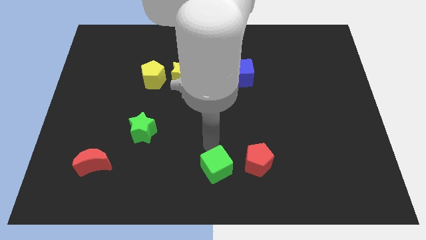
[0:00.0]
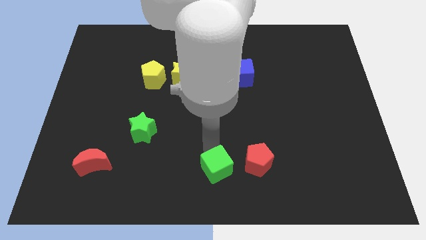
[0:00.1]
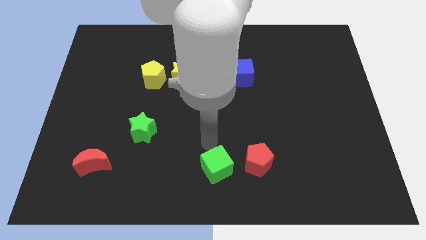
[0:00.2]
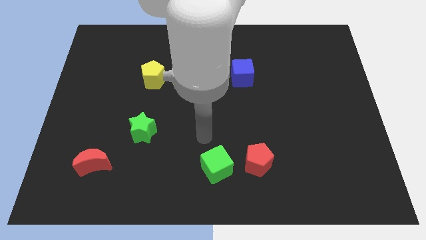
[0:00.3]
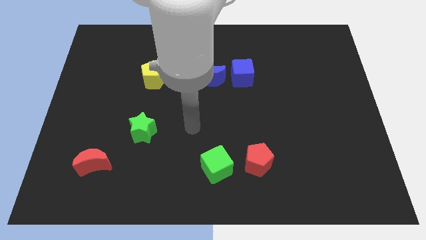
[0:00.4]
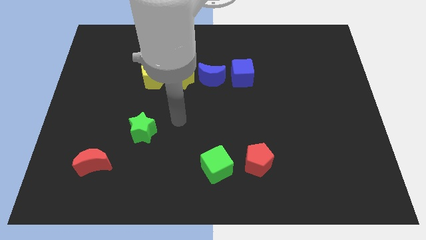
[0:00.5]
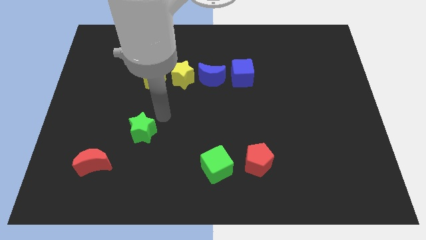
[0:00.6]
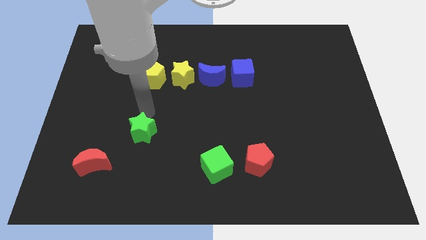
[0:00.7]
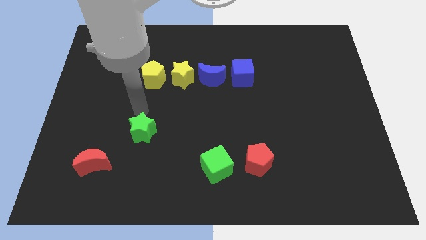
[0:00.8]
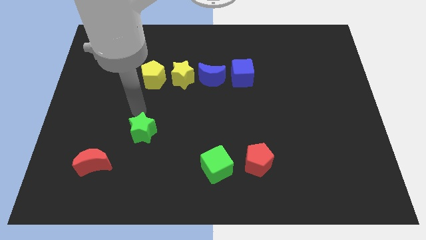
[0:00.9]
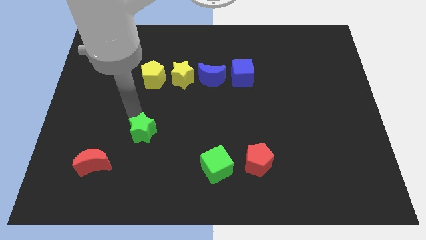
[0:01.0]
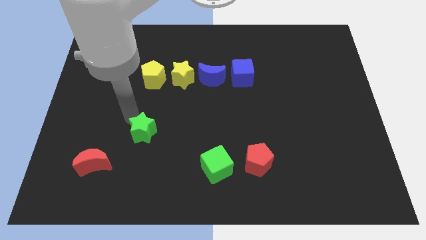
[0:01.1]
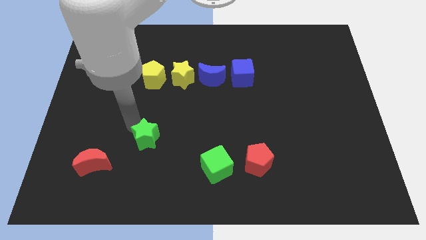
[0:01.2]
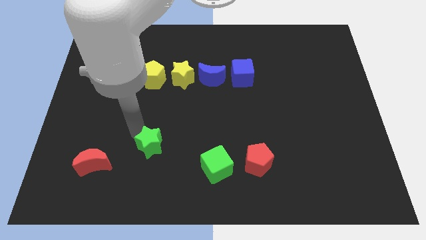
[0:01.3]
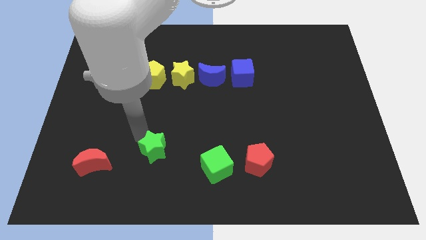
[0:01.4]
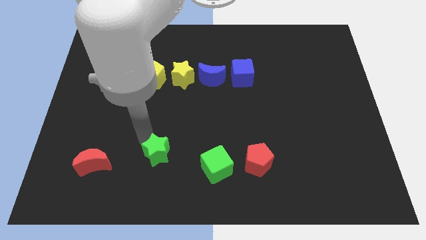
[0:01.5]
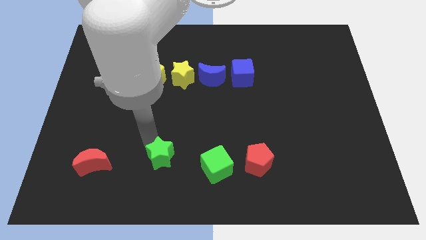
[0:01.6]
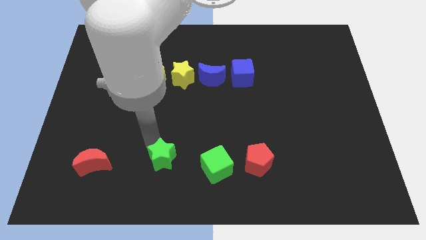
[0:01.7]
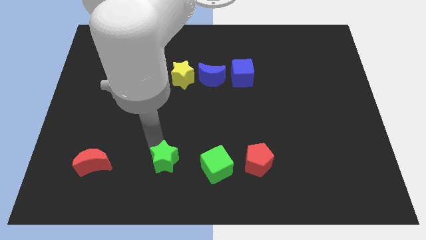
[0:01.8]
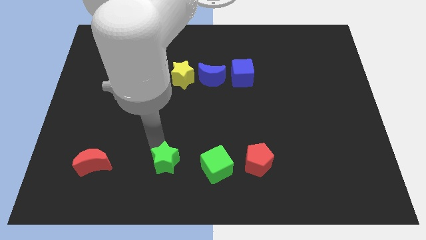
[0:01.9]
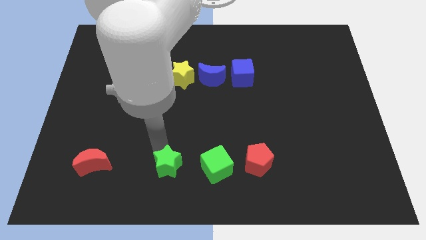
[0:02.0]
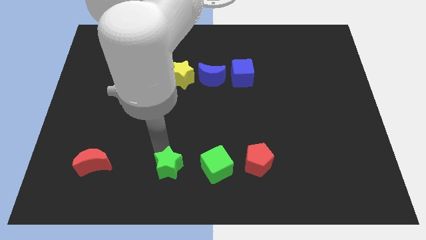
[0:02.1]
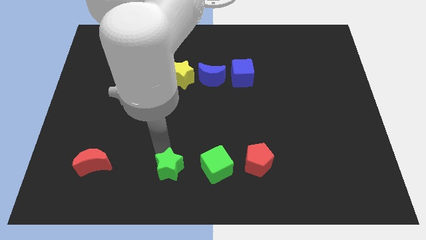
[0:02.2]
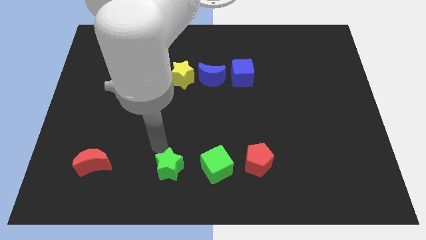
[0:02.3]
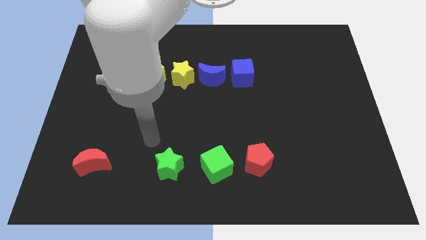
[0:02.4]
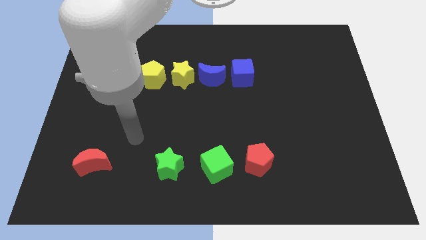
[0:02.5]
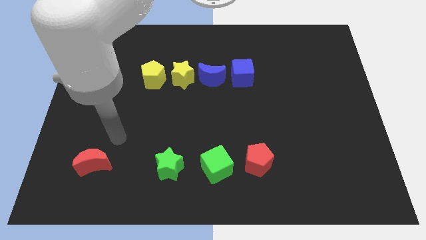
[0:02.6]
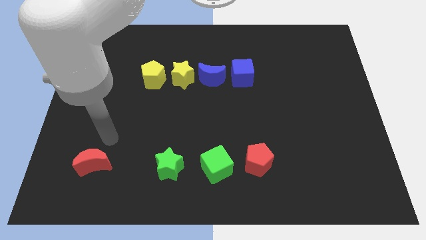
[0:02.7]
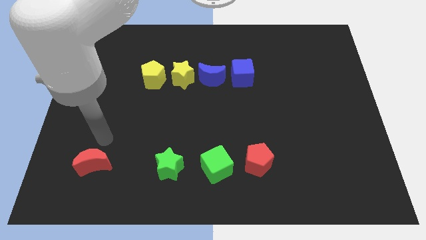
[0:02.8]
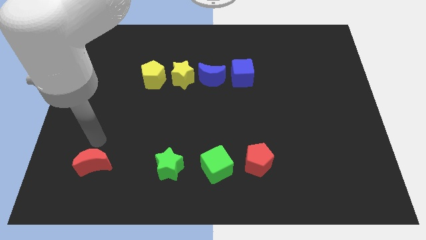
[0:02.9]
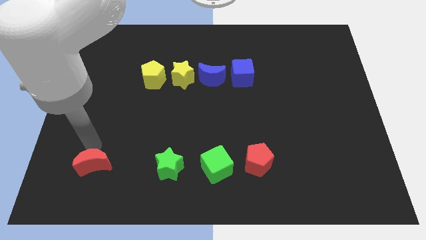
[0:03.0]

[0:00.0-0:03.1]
move green star towards green cube

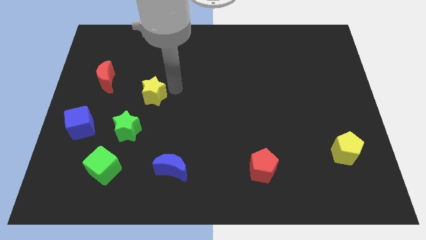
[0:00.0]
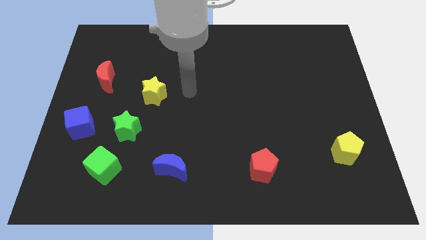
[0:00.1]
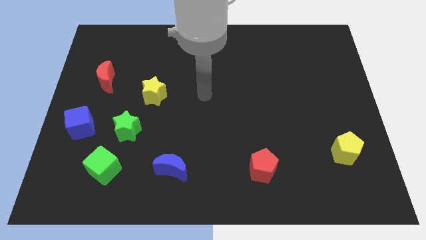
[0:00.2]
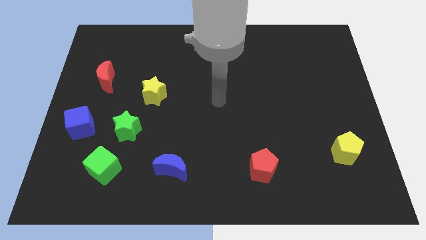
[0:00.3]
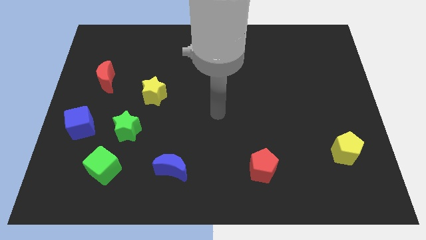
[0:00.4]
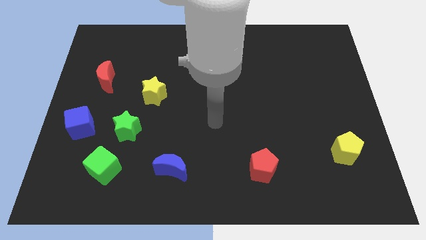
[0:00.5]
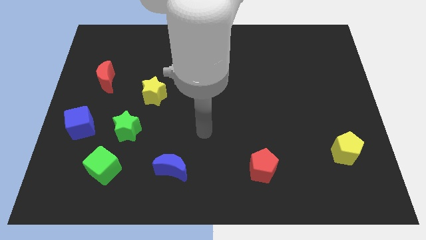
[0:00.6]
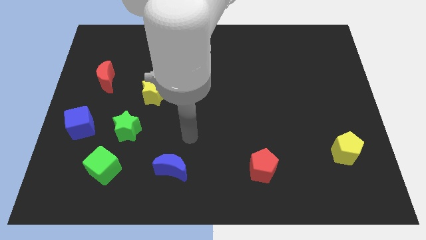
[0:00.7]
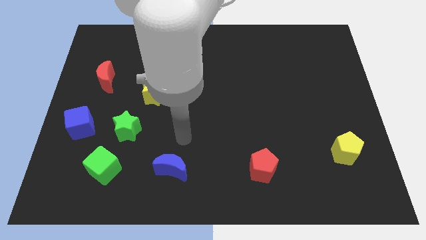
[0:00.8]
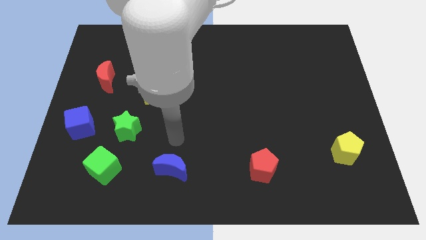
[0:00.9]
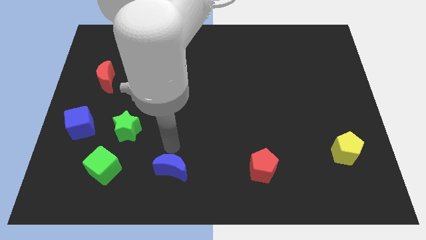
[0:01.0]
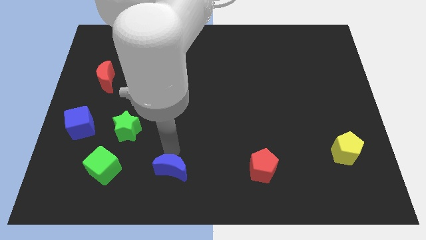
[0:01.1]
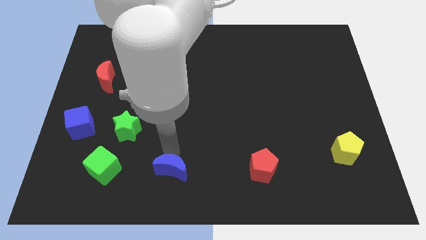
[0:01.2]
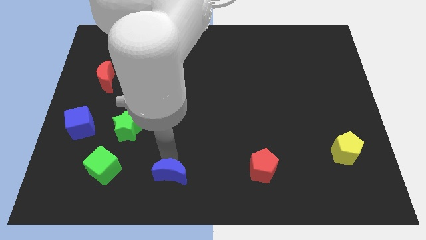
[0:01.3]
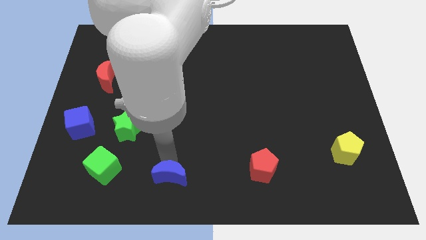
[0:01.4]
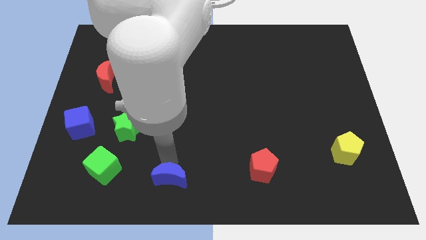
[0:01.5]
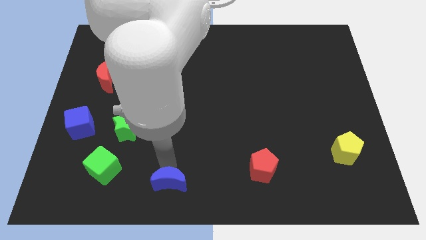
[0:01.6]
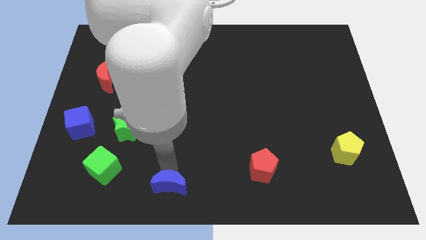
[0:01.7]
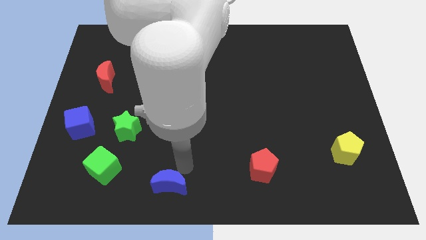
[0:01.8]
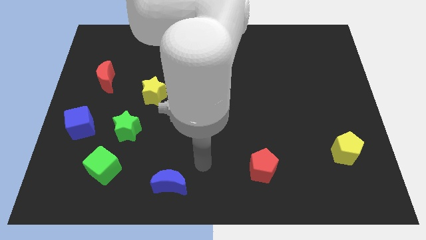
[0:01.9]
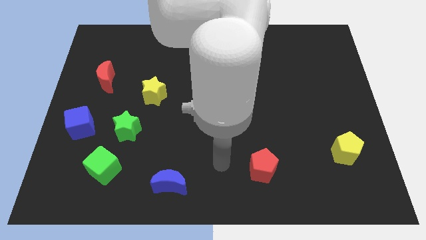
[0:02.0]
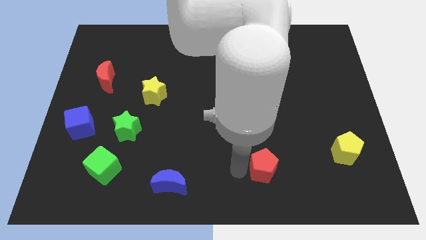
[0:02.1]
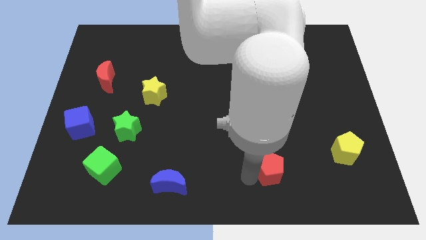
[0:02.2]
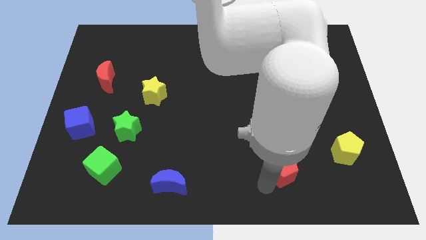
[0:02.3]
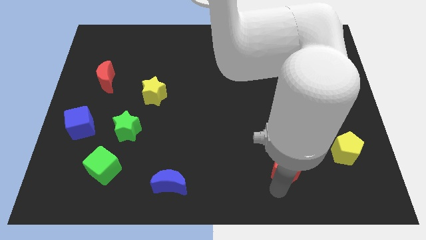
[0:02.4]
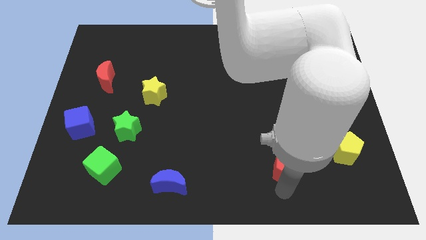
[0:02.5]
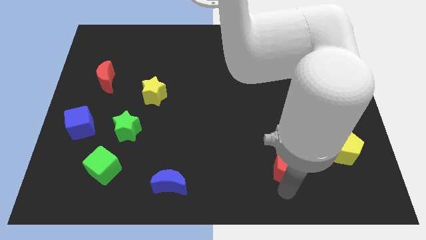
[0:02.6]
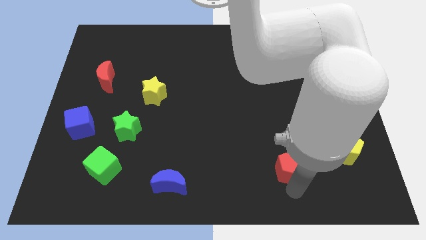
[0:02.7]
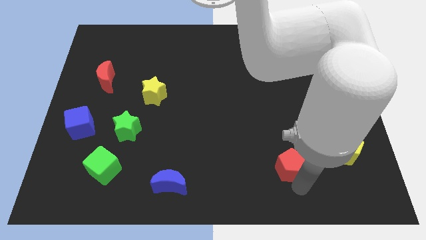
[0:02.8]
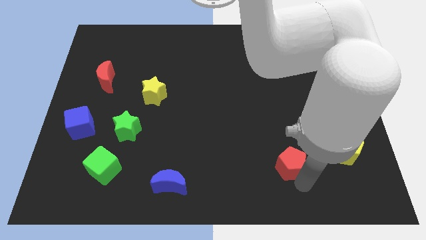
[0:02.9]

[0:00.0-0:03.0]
push the blue moon to the bottom side of the board

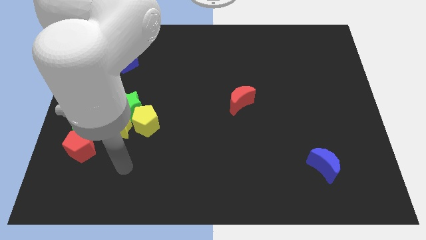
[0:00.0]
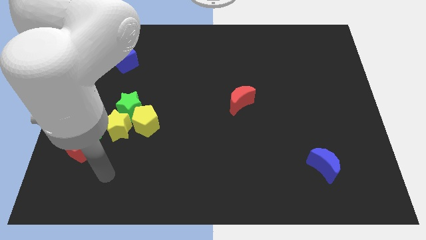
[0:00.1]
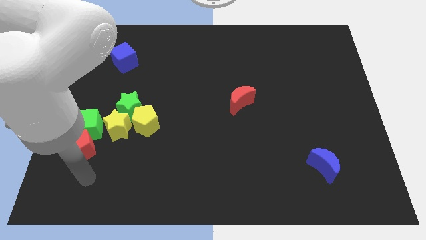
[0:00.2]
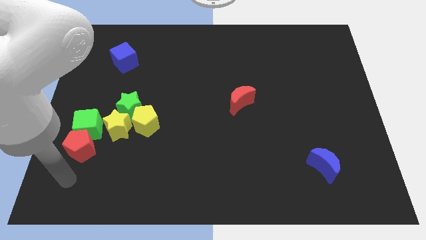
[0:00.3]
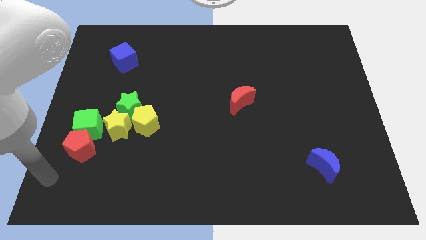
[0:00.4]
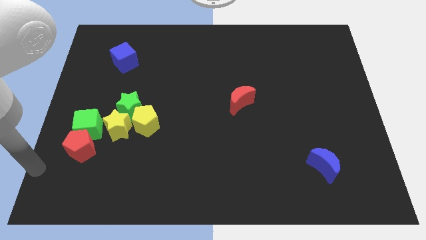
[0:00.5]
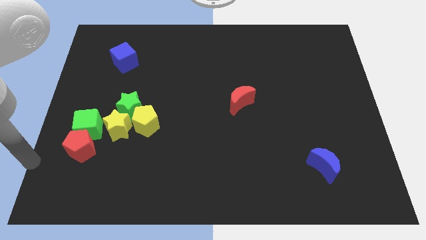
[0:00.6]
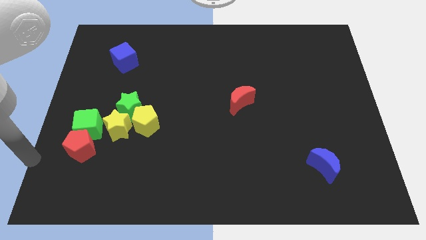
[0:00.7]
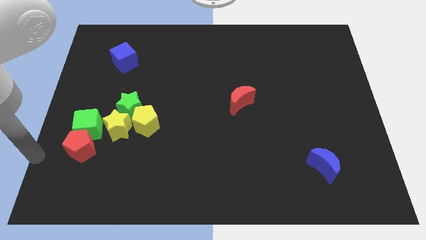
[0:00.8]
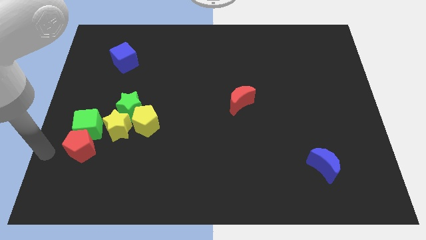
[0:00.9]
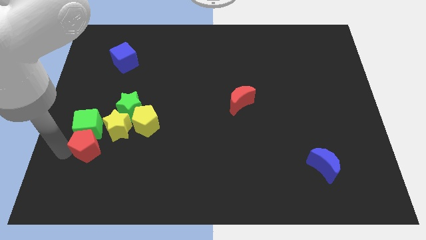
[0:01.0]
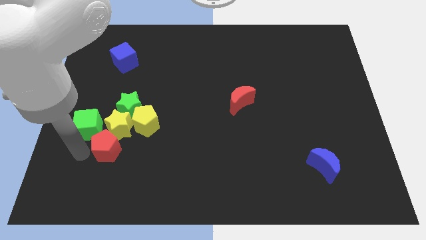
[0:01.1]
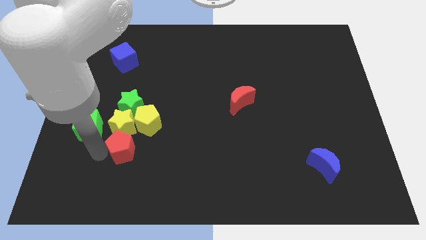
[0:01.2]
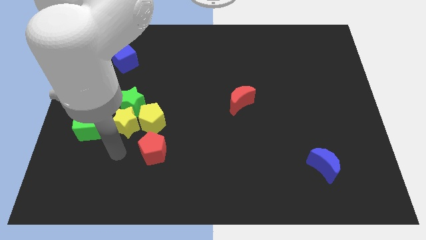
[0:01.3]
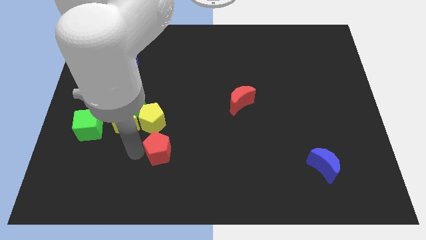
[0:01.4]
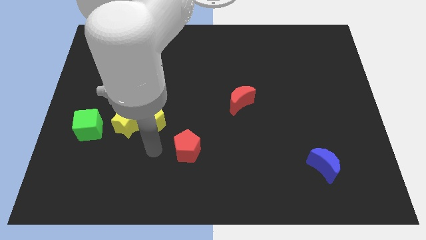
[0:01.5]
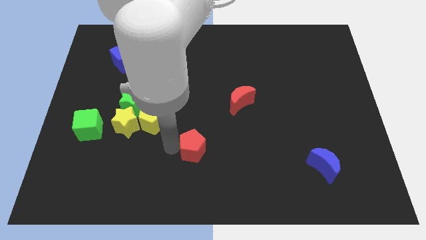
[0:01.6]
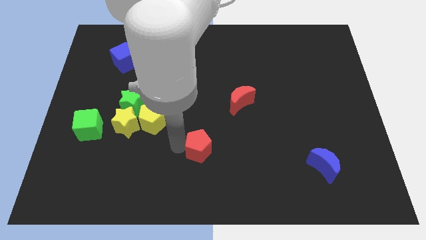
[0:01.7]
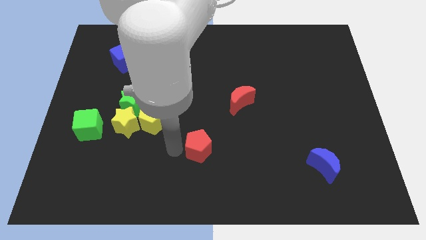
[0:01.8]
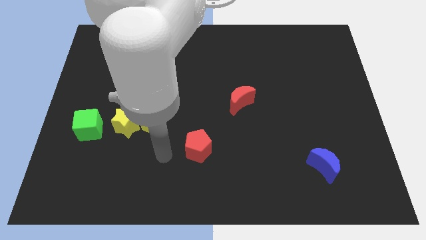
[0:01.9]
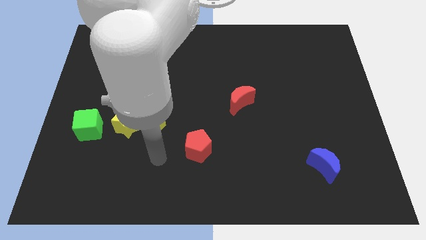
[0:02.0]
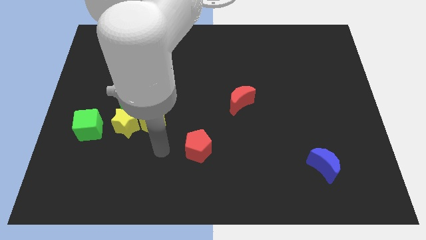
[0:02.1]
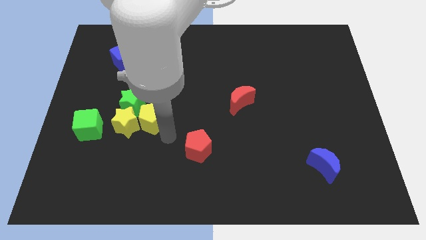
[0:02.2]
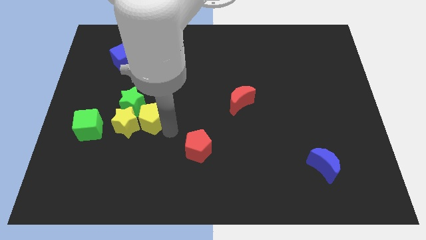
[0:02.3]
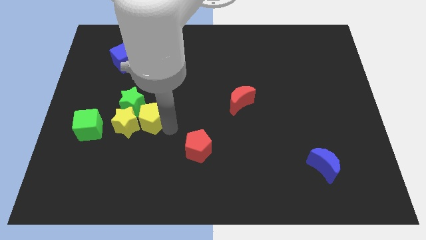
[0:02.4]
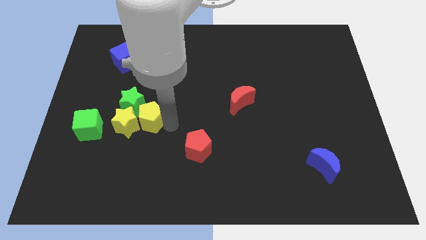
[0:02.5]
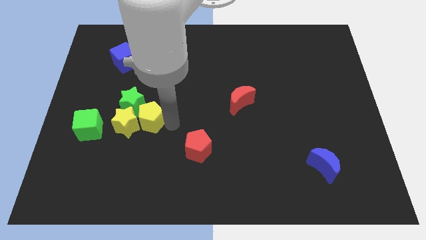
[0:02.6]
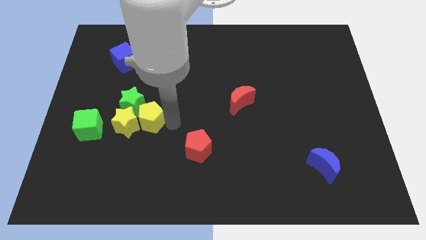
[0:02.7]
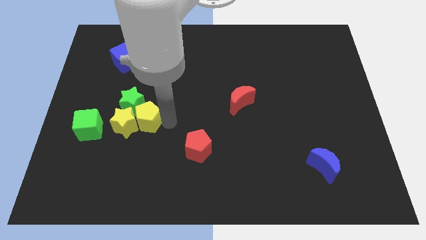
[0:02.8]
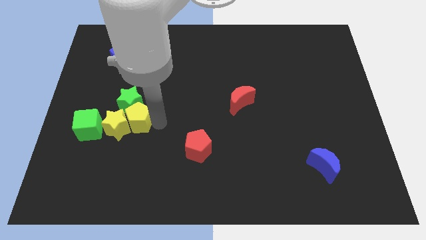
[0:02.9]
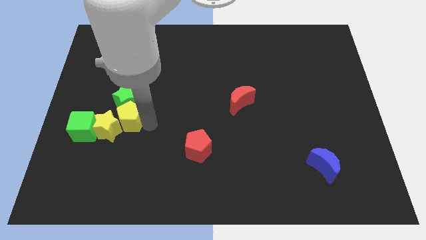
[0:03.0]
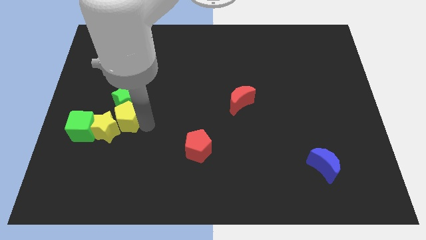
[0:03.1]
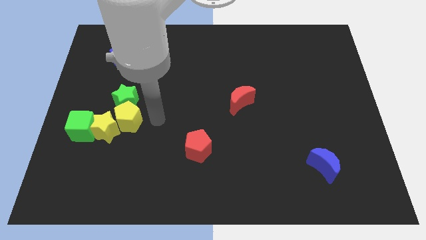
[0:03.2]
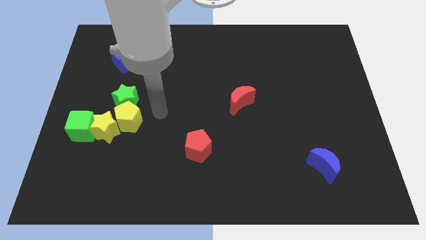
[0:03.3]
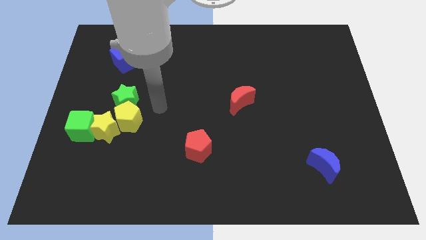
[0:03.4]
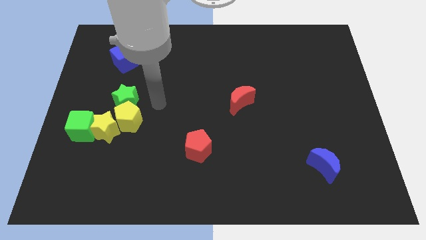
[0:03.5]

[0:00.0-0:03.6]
move the red pentagon to the bottom center
